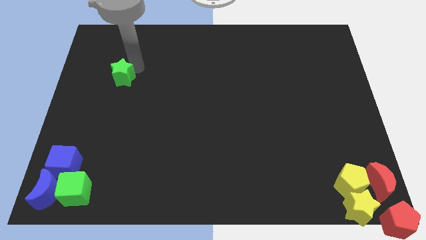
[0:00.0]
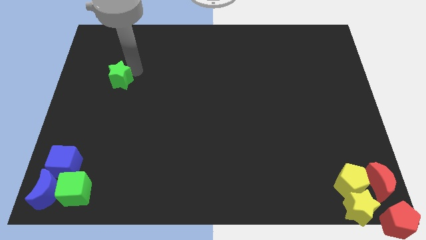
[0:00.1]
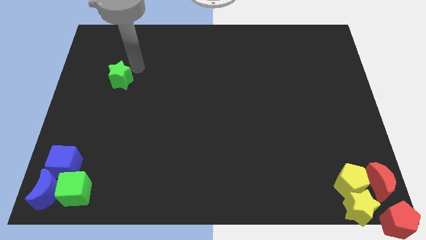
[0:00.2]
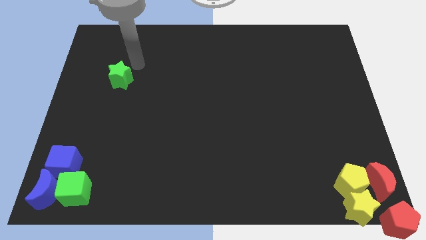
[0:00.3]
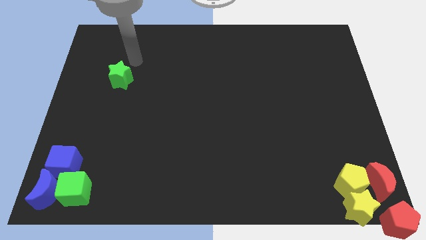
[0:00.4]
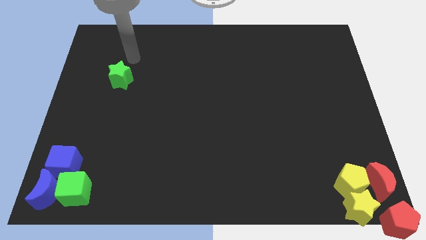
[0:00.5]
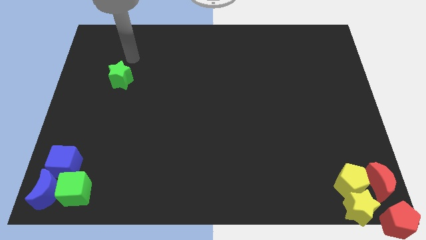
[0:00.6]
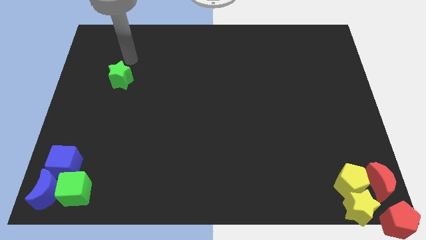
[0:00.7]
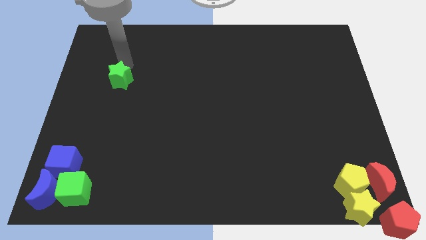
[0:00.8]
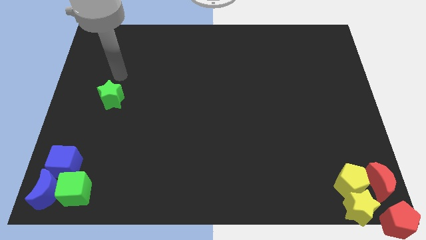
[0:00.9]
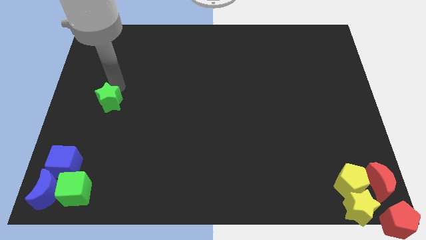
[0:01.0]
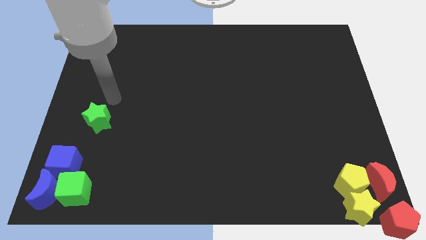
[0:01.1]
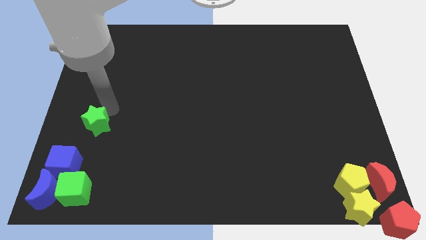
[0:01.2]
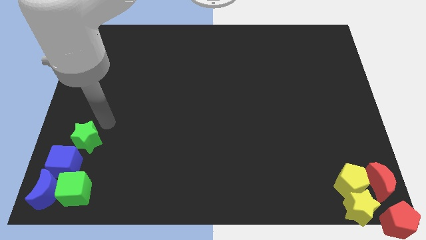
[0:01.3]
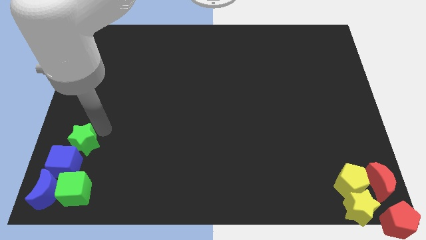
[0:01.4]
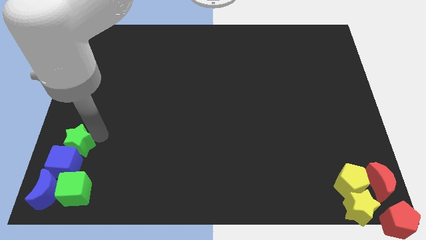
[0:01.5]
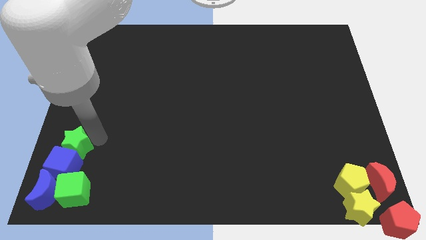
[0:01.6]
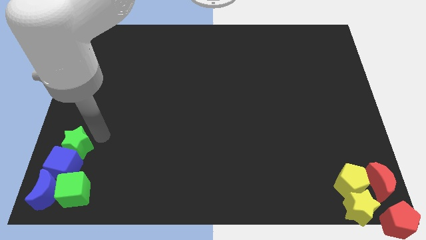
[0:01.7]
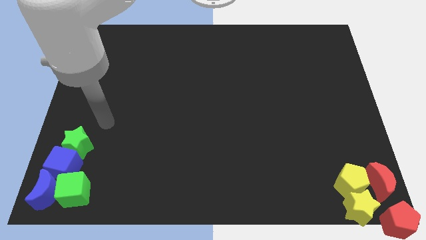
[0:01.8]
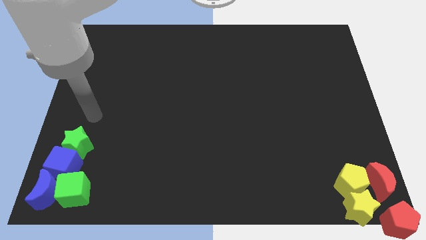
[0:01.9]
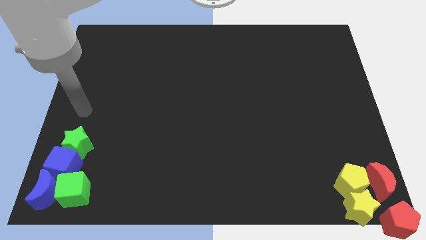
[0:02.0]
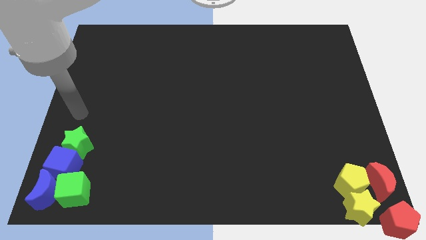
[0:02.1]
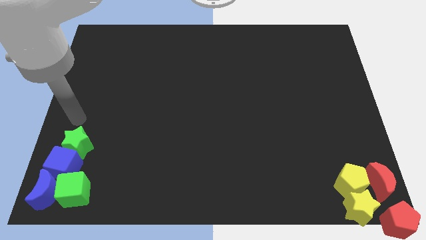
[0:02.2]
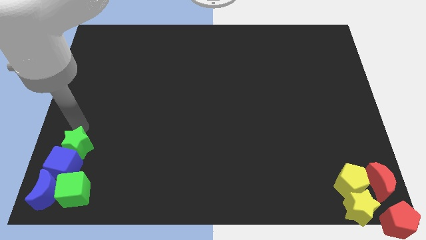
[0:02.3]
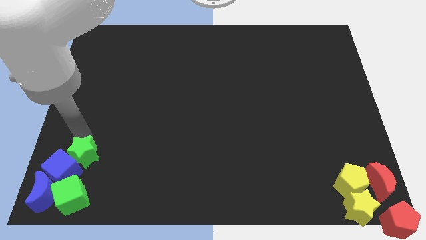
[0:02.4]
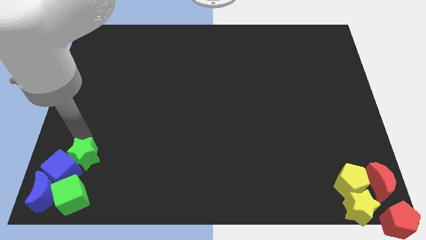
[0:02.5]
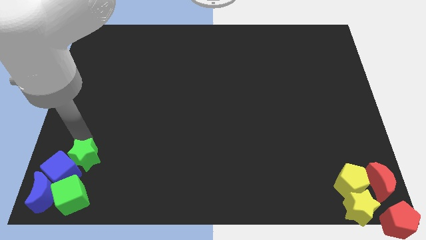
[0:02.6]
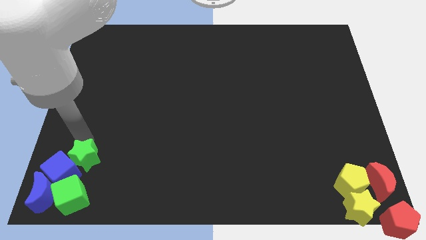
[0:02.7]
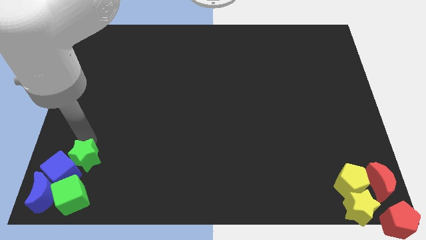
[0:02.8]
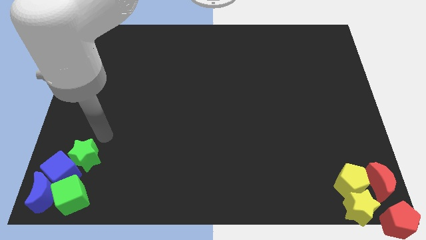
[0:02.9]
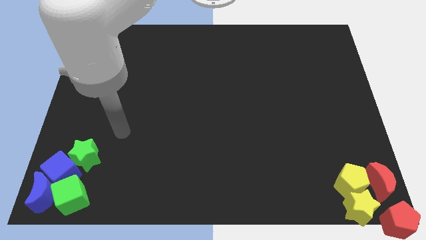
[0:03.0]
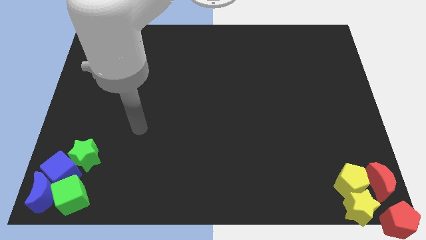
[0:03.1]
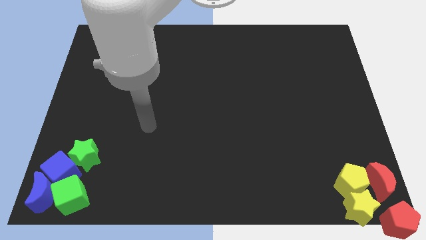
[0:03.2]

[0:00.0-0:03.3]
move the green star right beside the blue cube

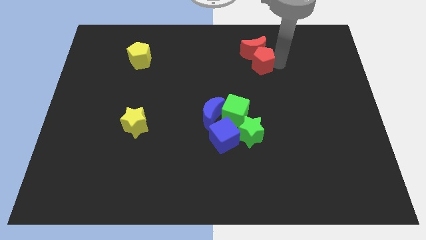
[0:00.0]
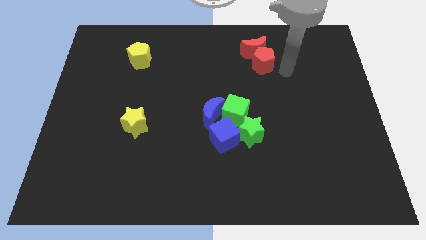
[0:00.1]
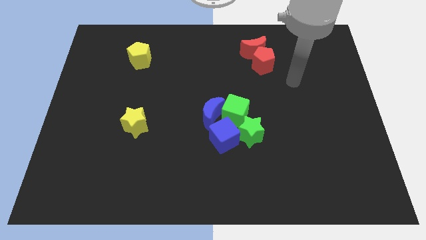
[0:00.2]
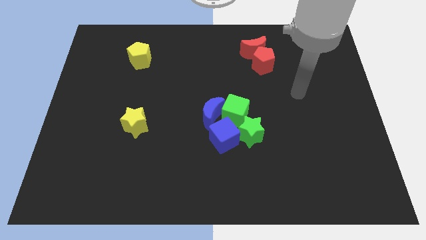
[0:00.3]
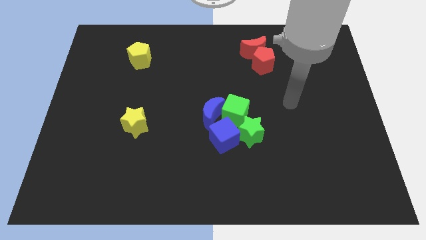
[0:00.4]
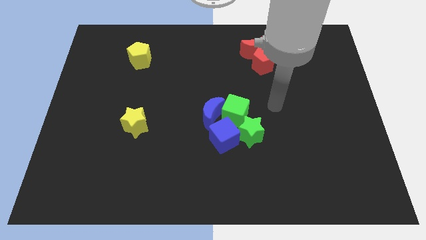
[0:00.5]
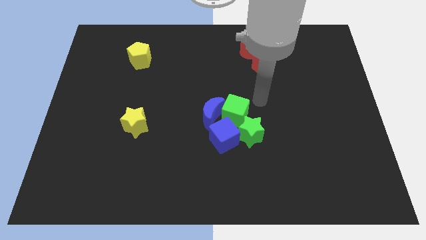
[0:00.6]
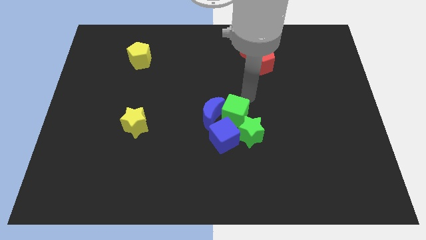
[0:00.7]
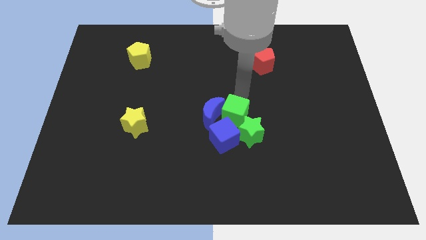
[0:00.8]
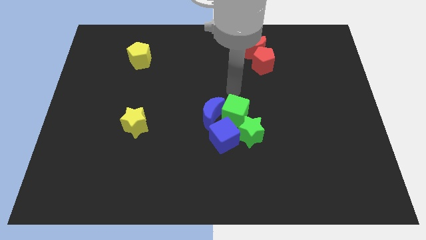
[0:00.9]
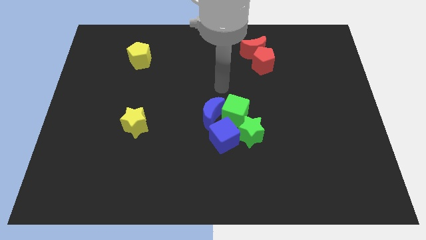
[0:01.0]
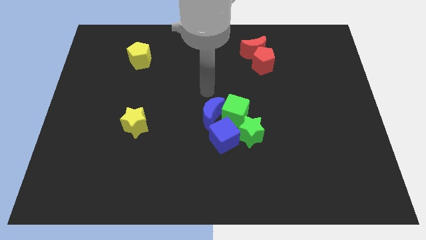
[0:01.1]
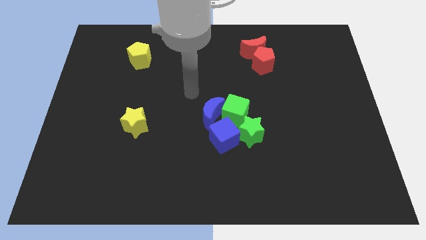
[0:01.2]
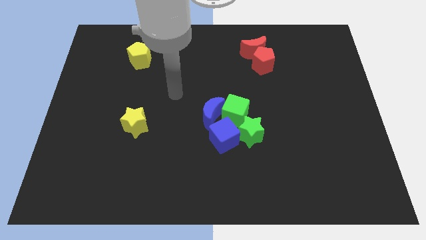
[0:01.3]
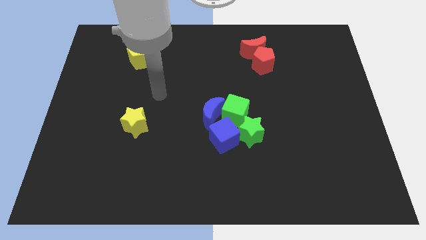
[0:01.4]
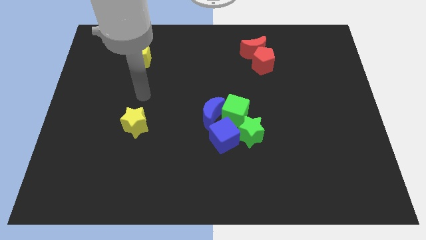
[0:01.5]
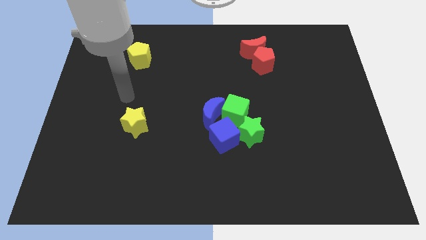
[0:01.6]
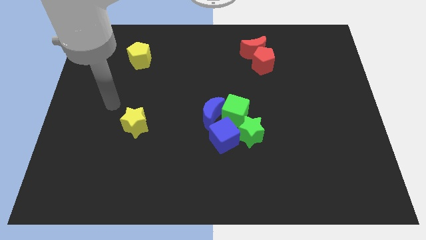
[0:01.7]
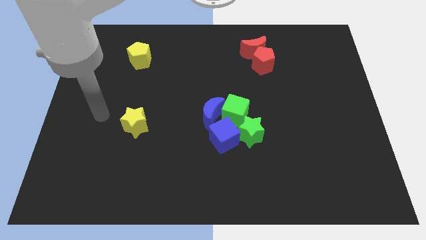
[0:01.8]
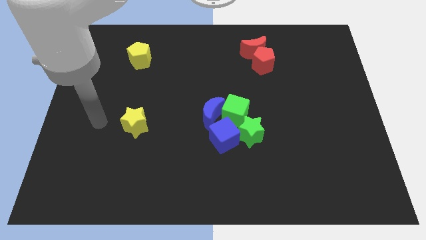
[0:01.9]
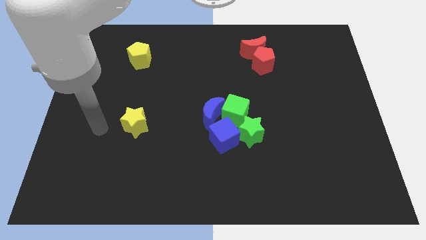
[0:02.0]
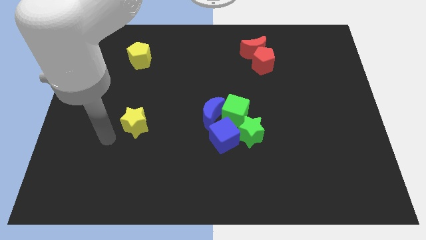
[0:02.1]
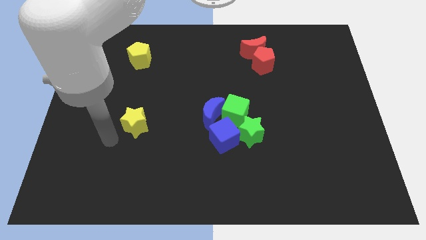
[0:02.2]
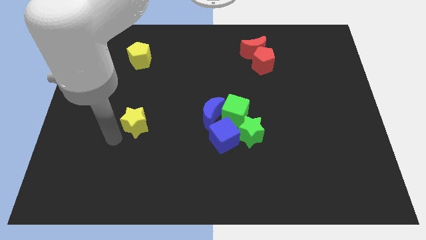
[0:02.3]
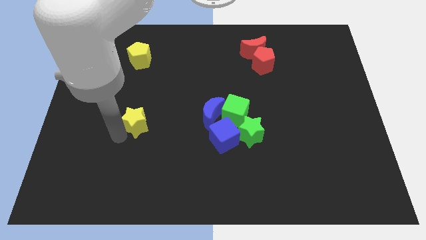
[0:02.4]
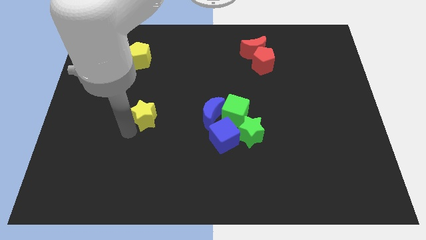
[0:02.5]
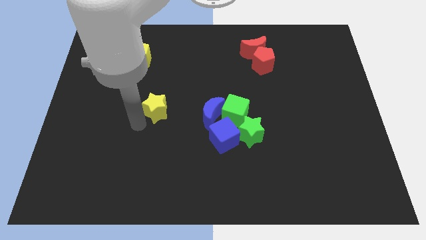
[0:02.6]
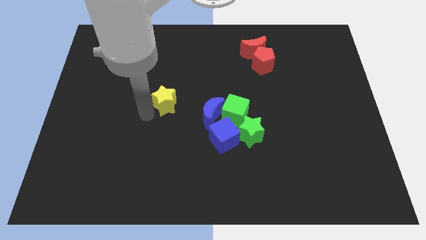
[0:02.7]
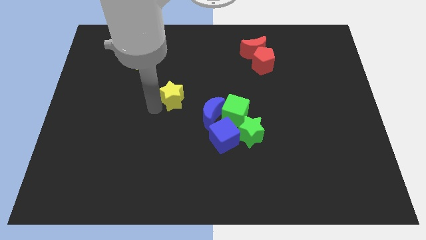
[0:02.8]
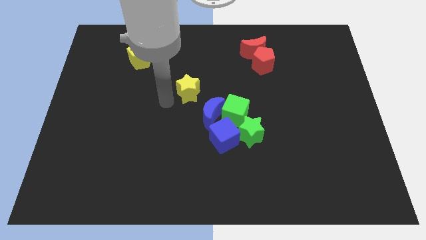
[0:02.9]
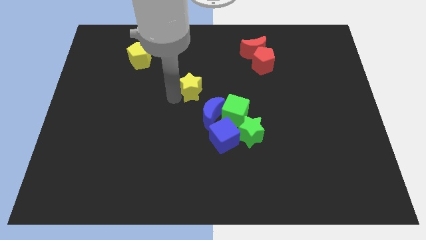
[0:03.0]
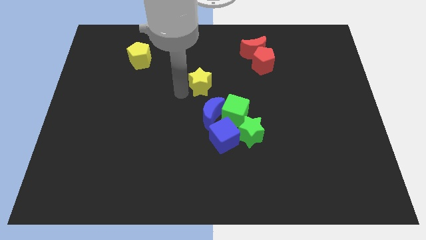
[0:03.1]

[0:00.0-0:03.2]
place the yellow star diagonal to the blue moon

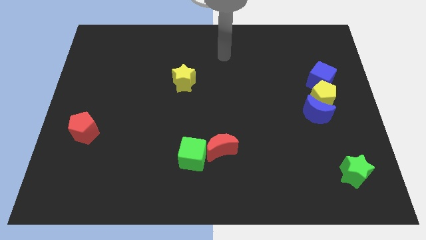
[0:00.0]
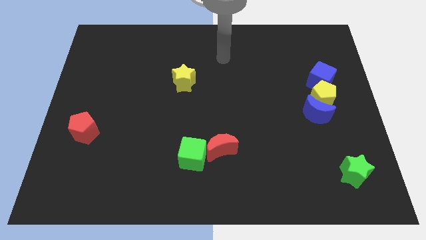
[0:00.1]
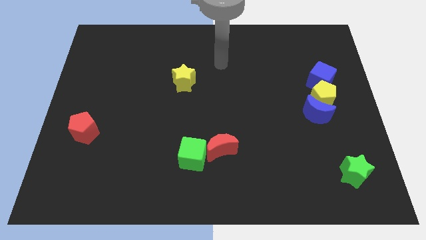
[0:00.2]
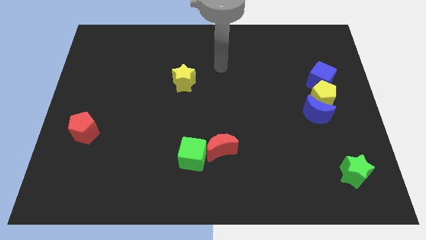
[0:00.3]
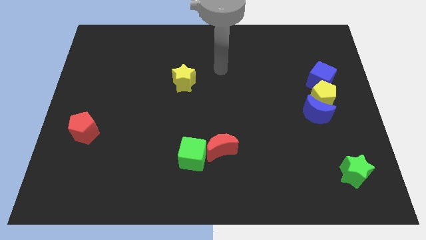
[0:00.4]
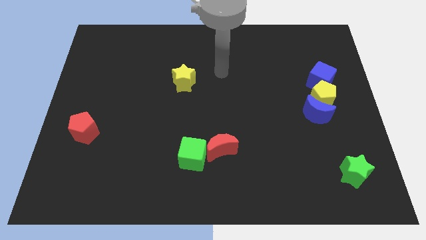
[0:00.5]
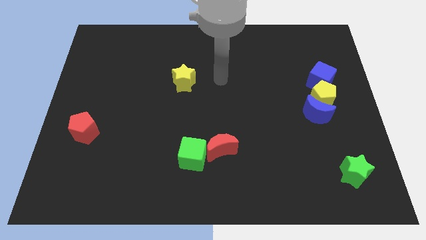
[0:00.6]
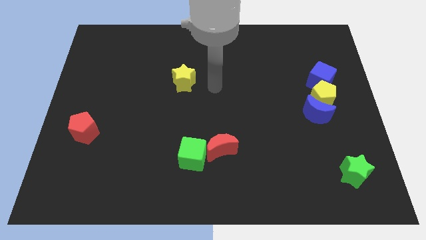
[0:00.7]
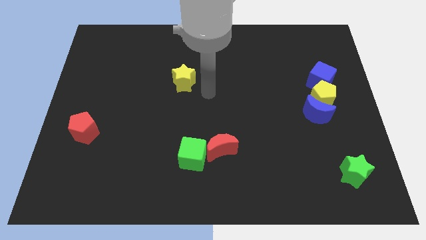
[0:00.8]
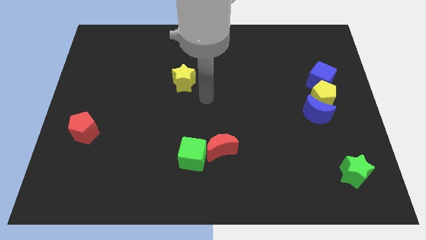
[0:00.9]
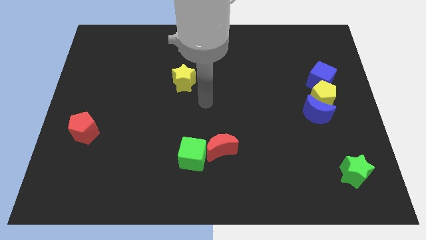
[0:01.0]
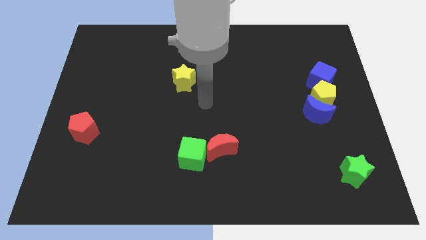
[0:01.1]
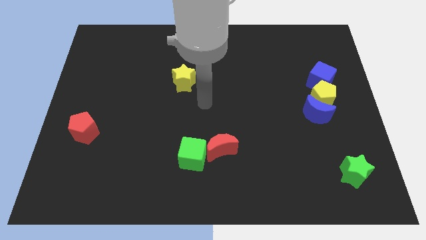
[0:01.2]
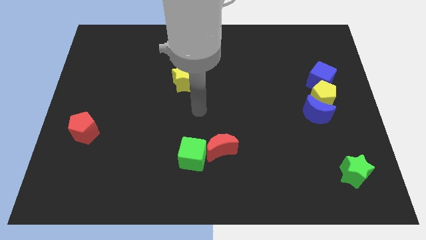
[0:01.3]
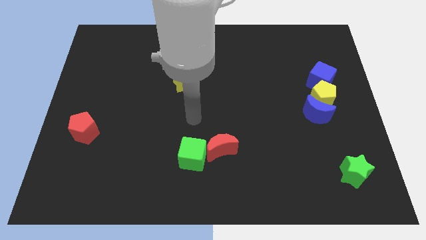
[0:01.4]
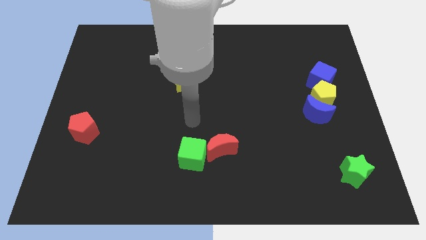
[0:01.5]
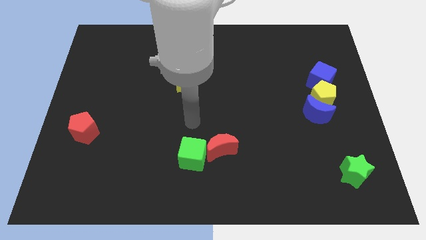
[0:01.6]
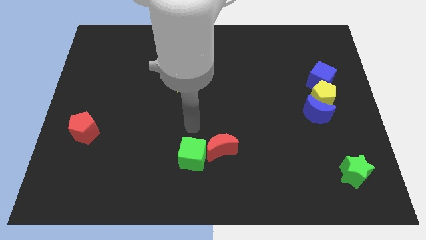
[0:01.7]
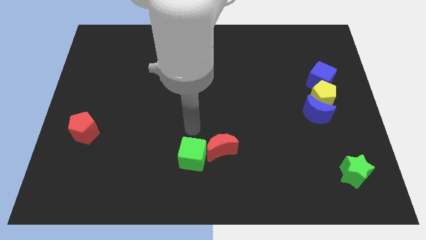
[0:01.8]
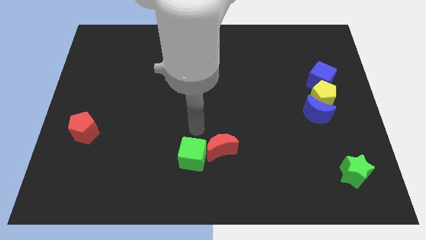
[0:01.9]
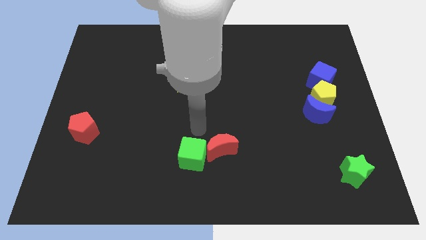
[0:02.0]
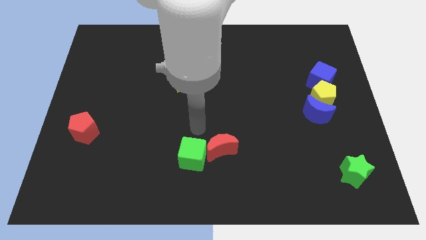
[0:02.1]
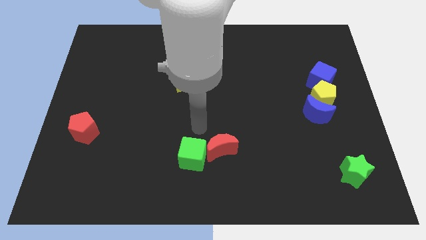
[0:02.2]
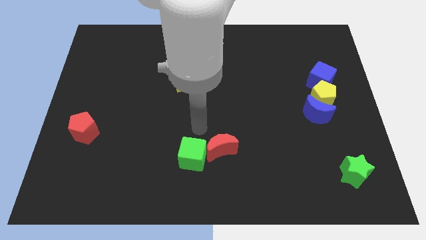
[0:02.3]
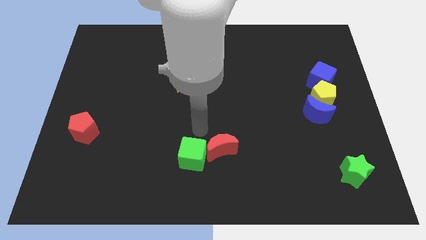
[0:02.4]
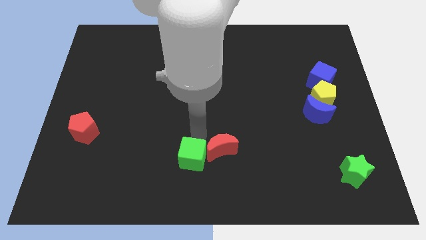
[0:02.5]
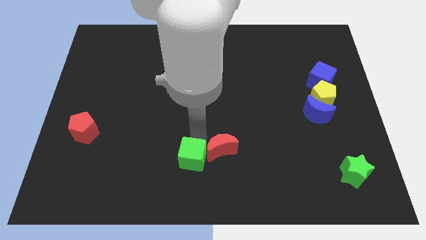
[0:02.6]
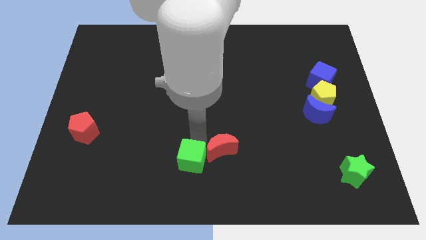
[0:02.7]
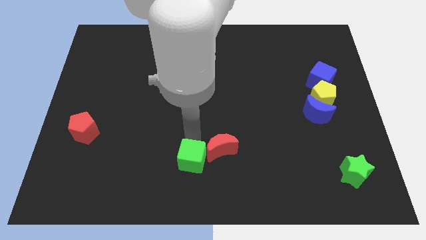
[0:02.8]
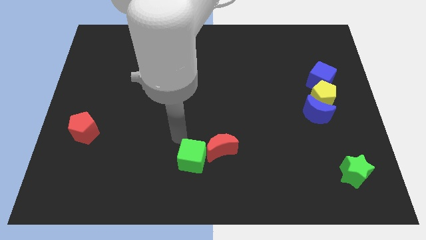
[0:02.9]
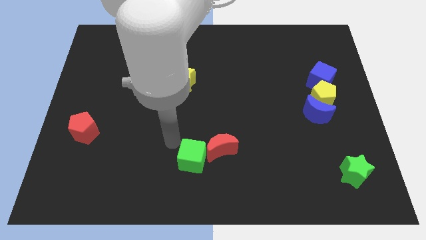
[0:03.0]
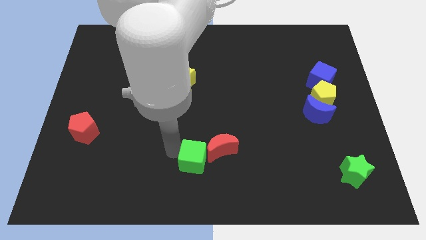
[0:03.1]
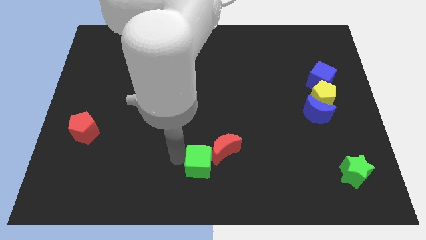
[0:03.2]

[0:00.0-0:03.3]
place your hand to the left of the green cube
